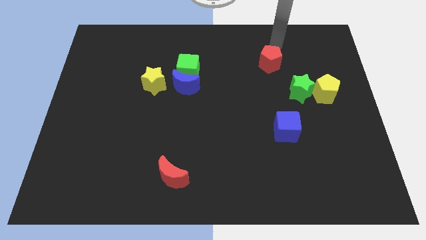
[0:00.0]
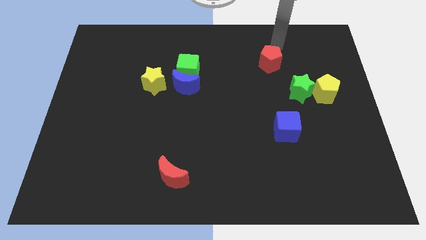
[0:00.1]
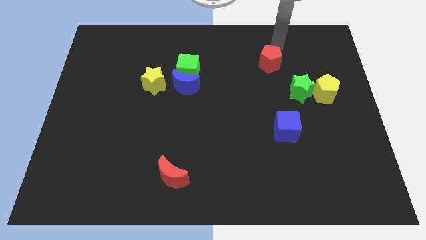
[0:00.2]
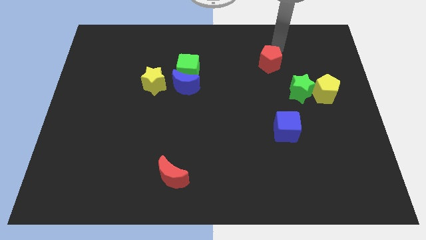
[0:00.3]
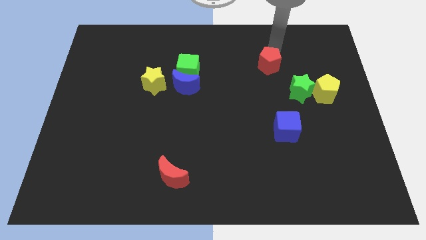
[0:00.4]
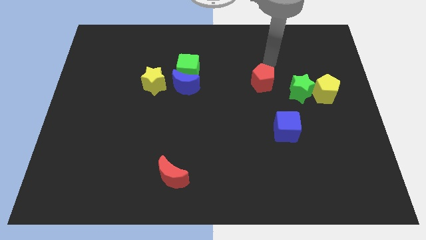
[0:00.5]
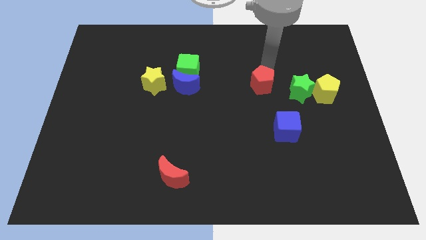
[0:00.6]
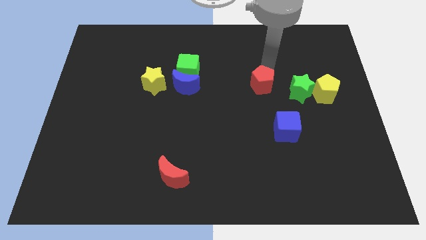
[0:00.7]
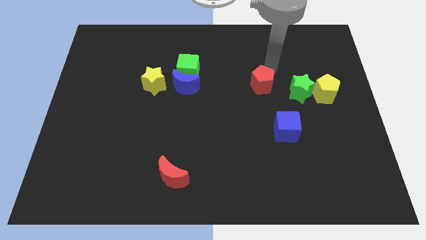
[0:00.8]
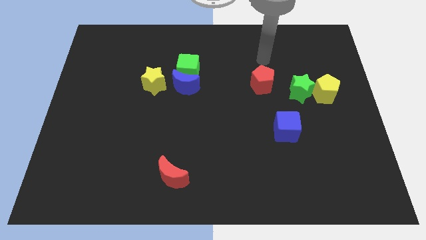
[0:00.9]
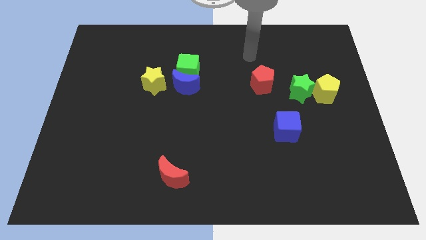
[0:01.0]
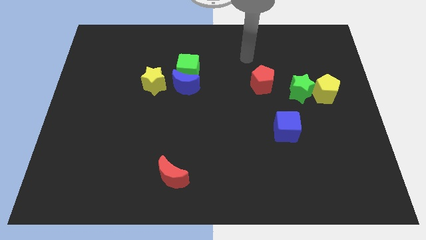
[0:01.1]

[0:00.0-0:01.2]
slightly push the red pentagon towards down

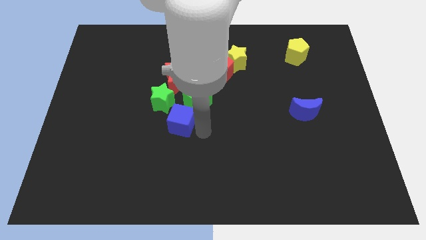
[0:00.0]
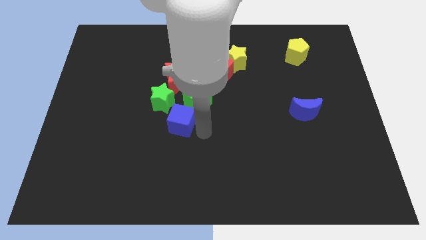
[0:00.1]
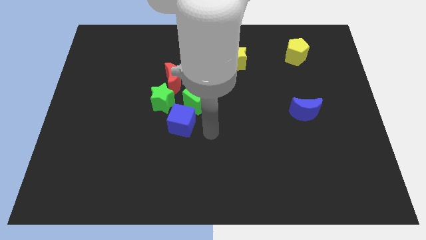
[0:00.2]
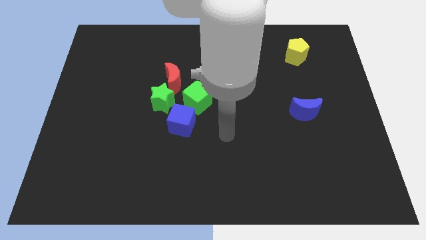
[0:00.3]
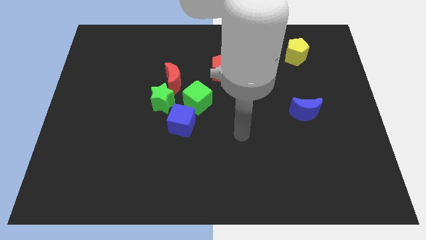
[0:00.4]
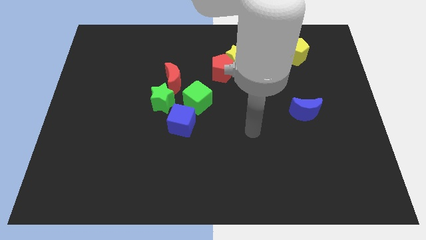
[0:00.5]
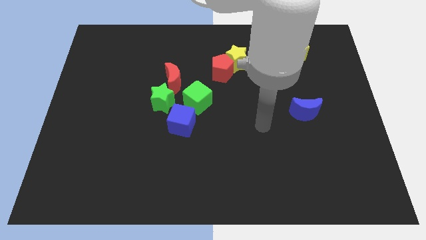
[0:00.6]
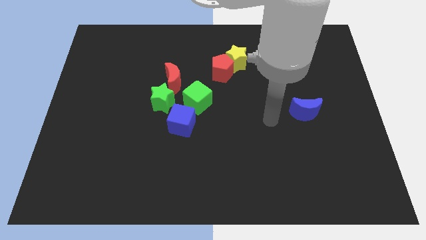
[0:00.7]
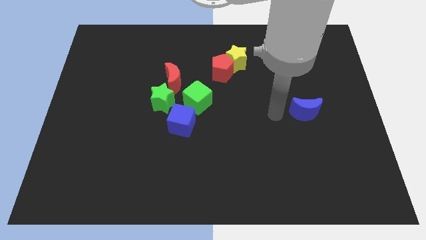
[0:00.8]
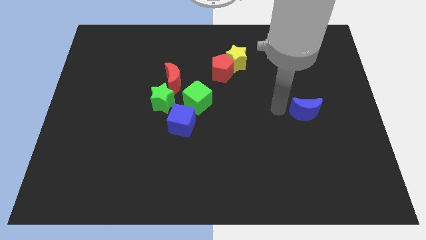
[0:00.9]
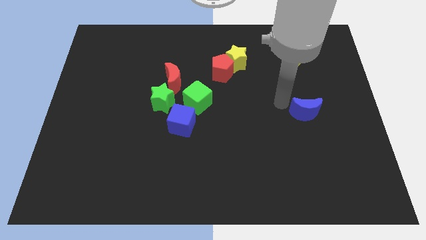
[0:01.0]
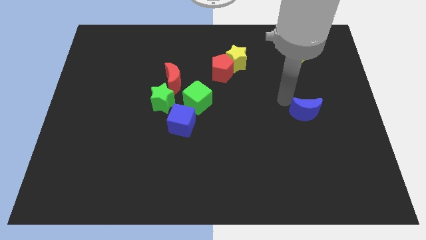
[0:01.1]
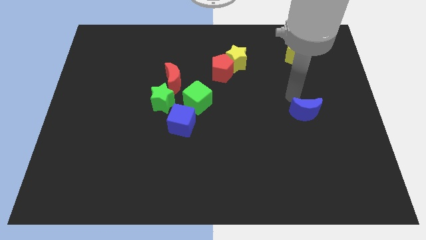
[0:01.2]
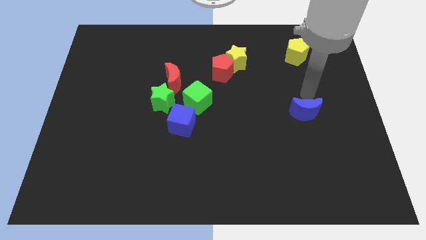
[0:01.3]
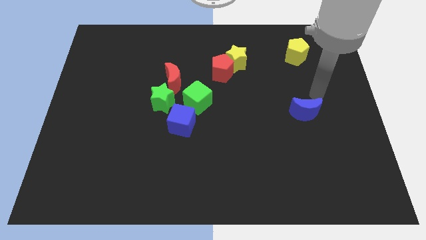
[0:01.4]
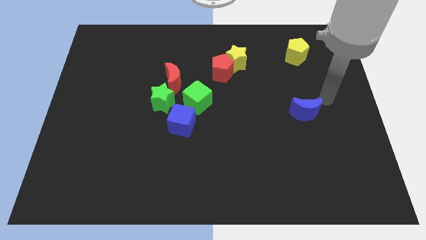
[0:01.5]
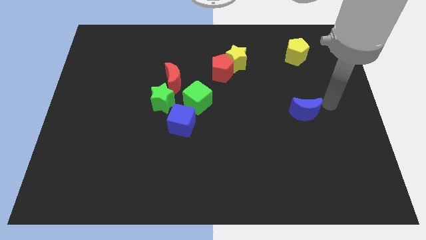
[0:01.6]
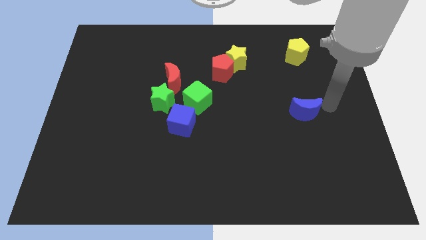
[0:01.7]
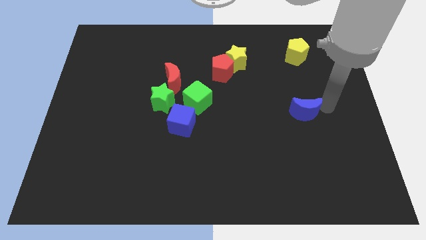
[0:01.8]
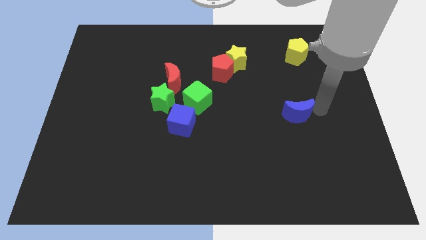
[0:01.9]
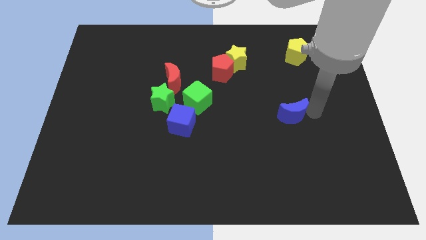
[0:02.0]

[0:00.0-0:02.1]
move your arm to the right of the blue crescent

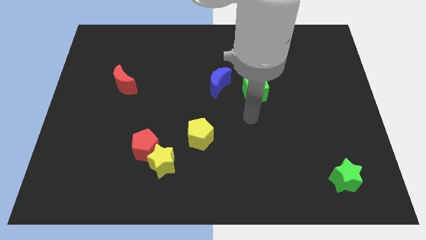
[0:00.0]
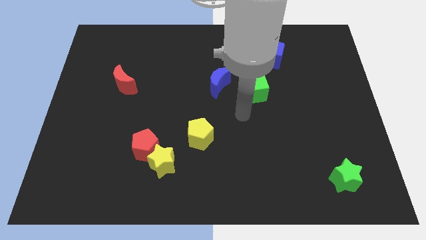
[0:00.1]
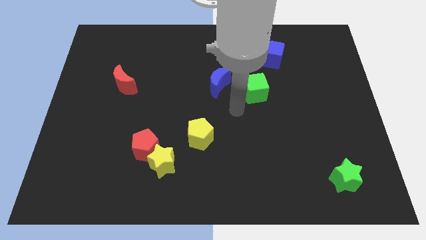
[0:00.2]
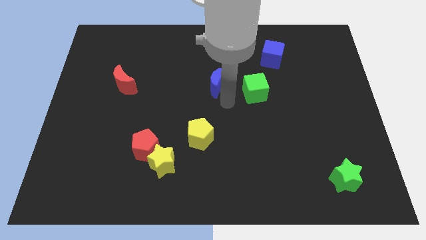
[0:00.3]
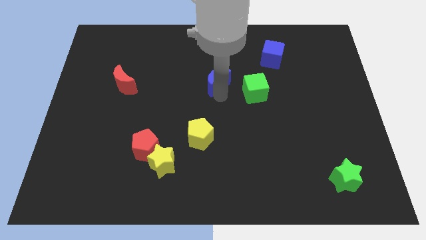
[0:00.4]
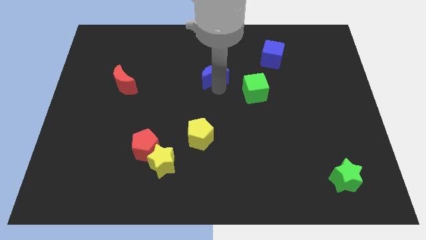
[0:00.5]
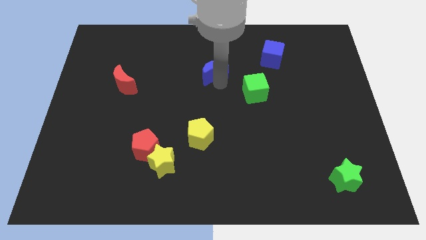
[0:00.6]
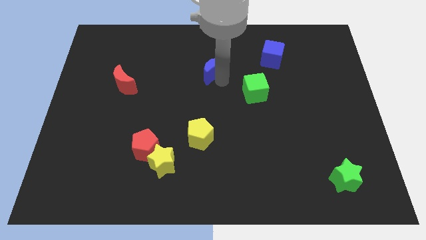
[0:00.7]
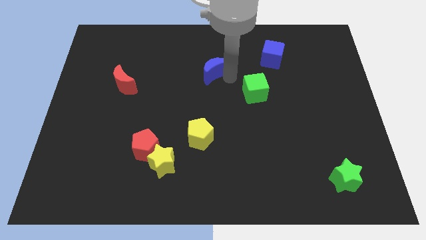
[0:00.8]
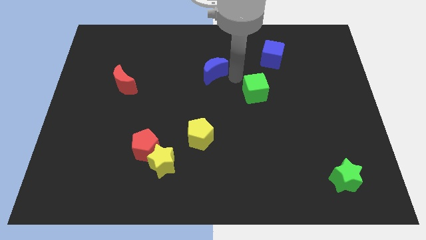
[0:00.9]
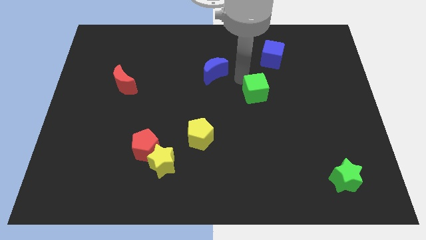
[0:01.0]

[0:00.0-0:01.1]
move the blue moon upwards

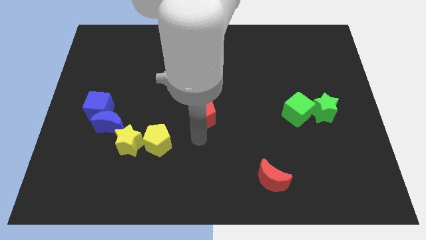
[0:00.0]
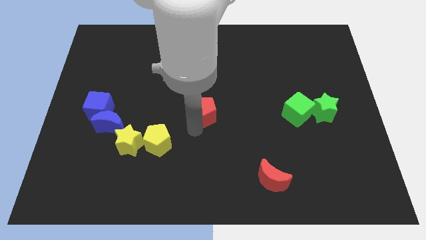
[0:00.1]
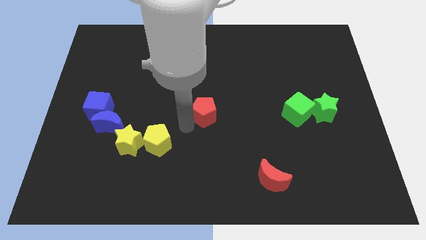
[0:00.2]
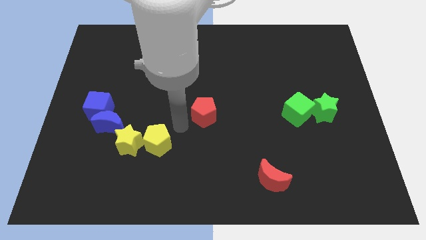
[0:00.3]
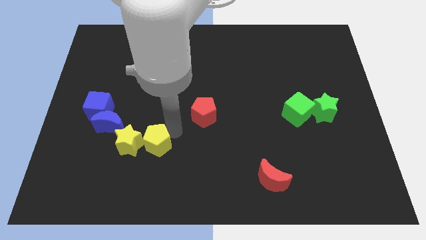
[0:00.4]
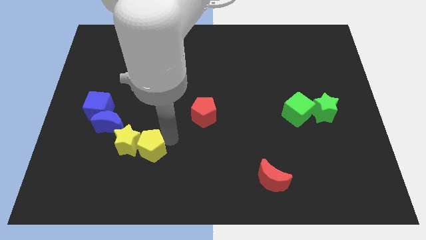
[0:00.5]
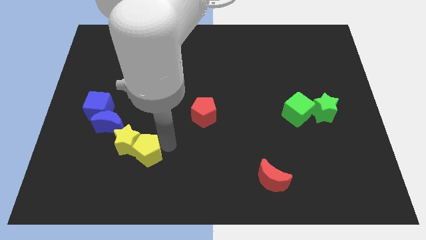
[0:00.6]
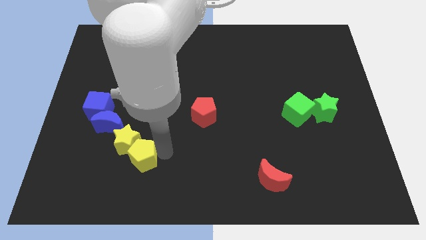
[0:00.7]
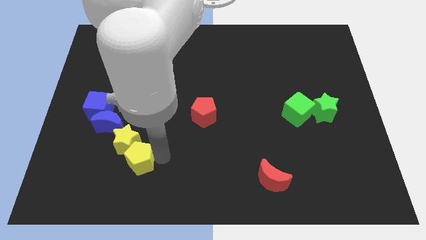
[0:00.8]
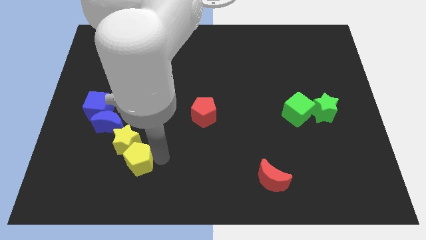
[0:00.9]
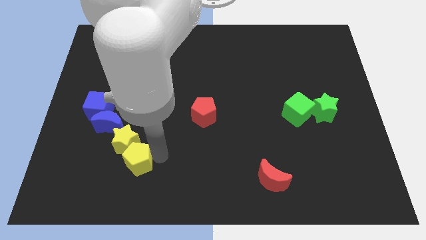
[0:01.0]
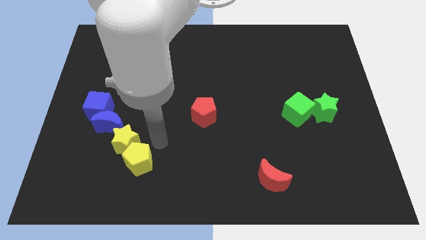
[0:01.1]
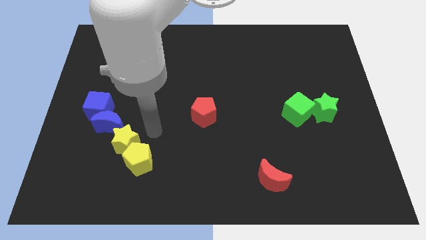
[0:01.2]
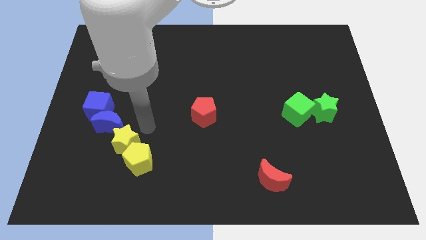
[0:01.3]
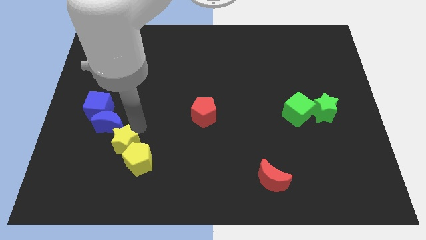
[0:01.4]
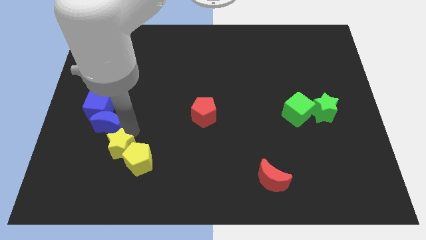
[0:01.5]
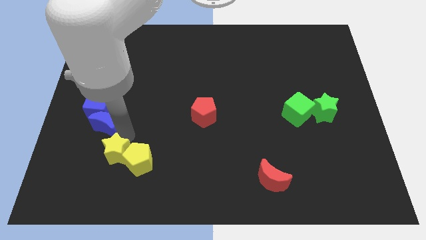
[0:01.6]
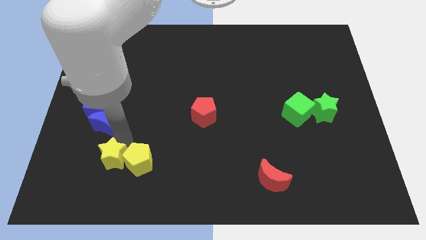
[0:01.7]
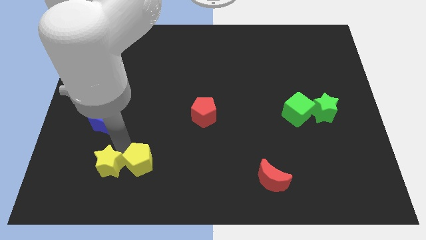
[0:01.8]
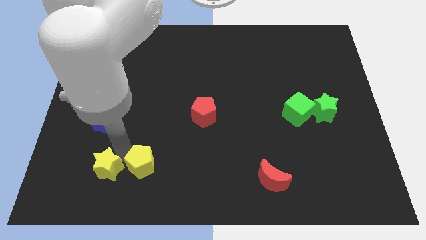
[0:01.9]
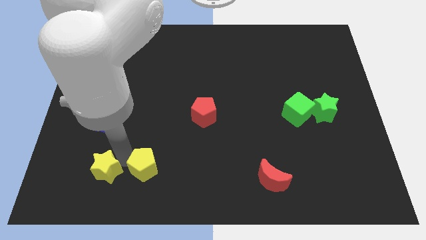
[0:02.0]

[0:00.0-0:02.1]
push the yellow blocks slightly to the bottom of the board

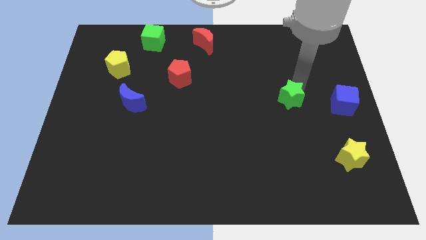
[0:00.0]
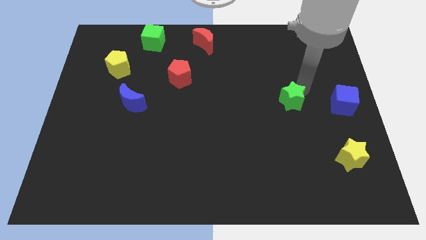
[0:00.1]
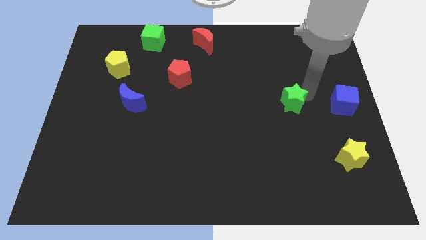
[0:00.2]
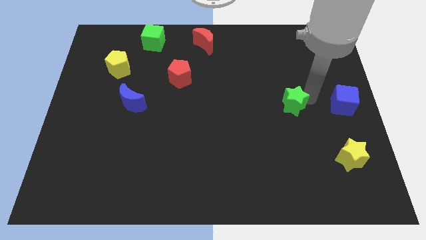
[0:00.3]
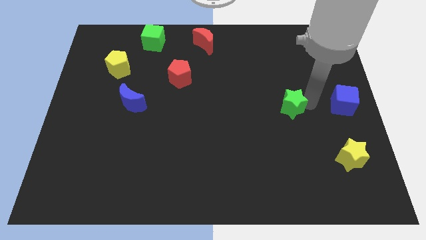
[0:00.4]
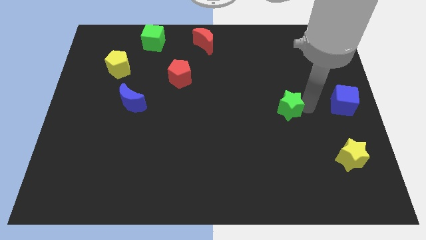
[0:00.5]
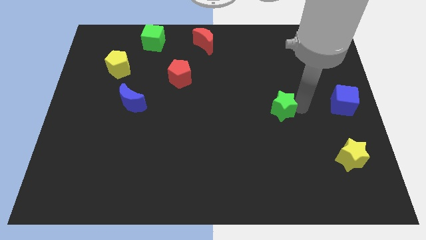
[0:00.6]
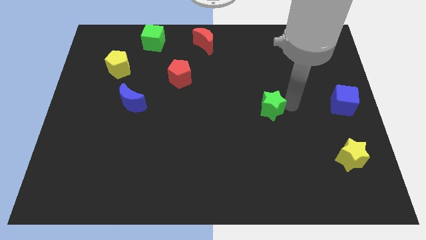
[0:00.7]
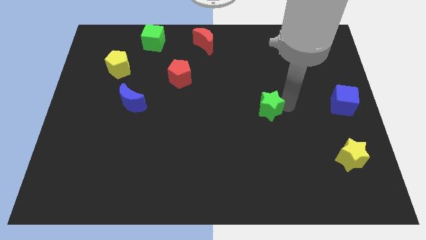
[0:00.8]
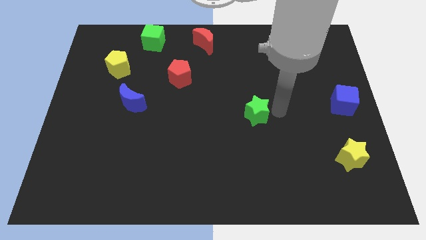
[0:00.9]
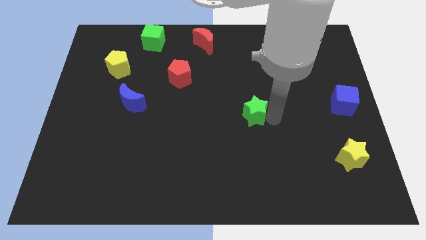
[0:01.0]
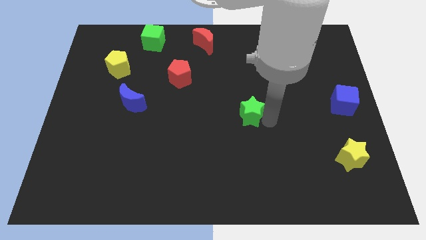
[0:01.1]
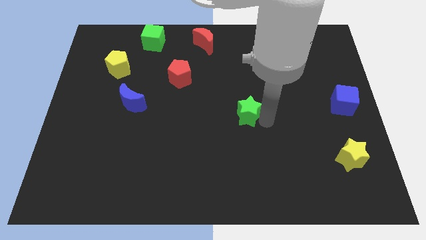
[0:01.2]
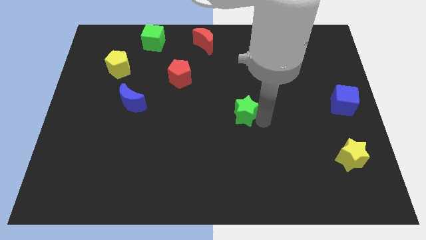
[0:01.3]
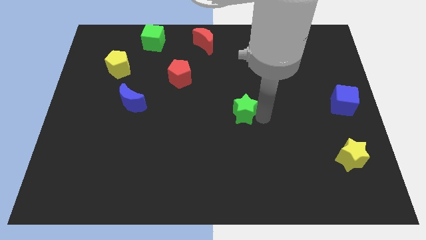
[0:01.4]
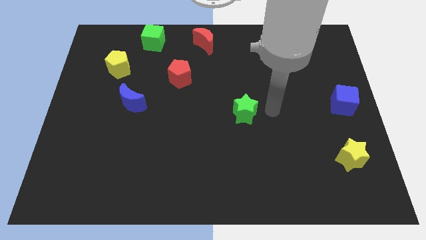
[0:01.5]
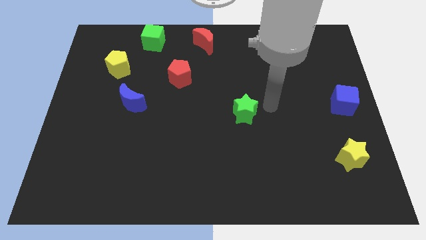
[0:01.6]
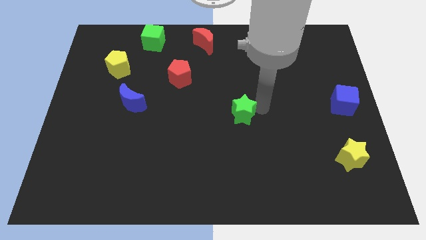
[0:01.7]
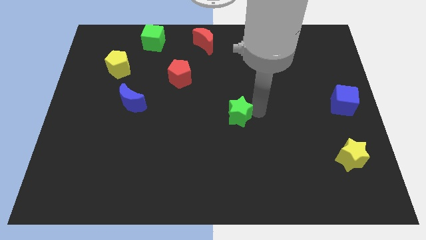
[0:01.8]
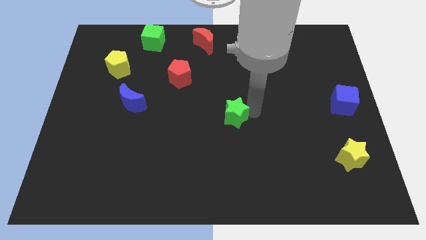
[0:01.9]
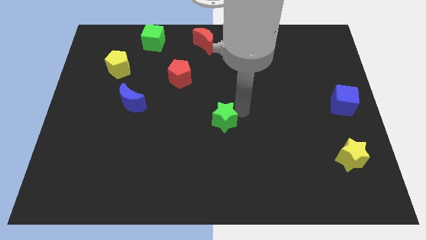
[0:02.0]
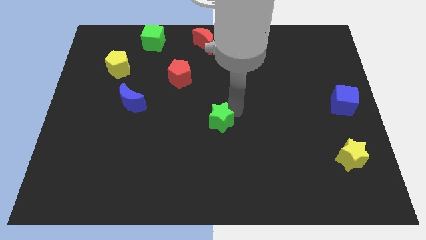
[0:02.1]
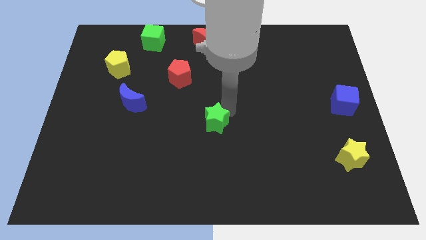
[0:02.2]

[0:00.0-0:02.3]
place the green star in between the blue semicircle and yellow star
